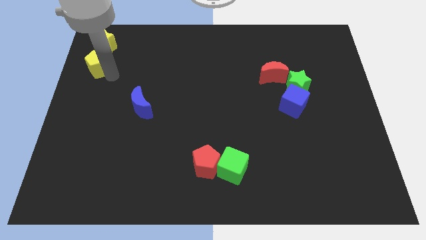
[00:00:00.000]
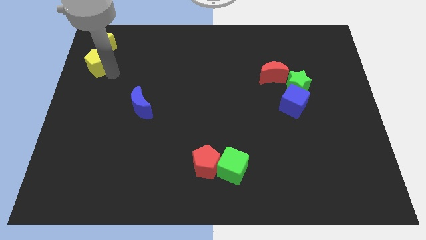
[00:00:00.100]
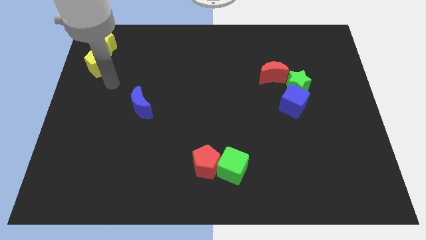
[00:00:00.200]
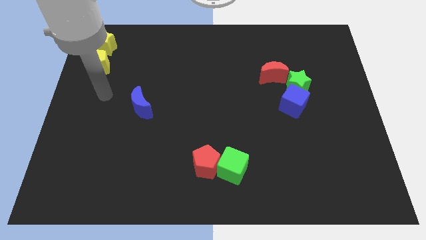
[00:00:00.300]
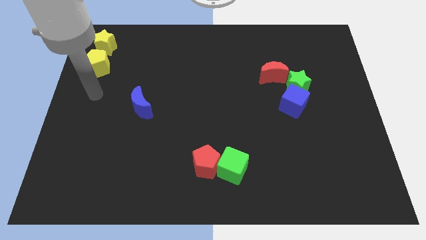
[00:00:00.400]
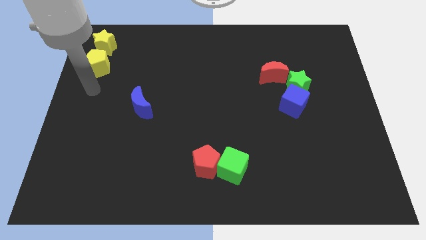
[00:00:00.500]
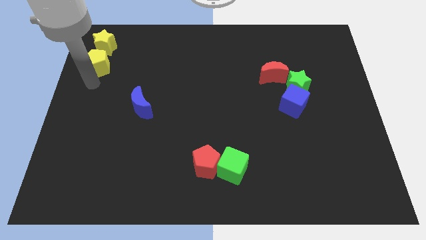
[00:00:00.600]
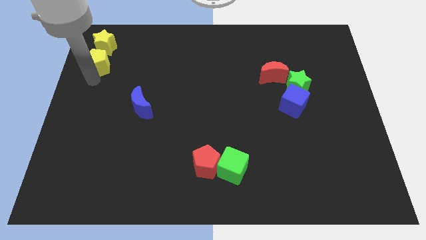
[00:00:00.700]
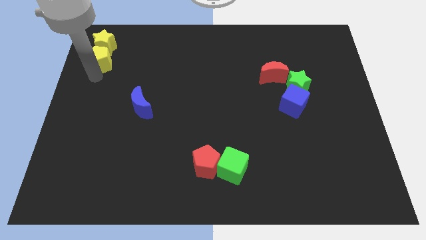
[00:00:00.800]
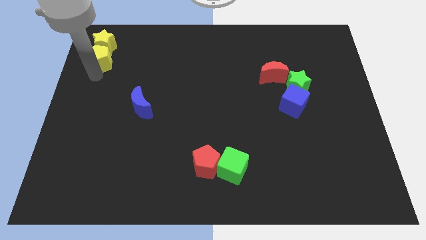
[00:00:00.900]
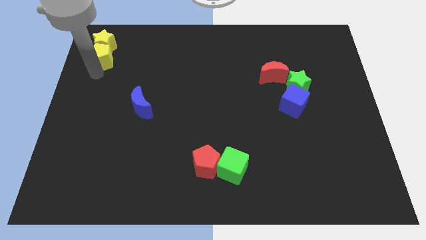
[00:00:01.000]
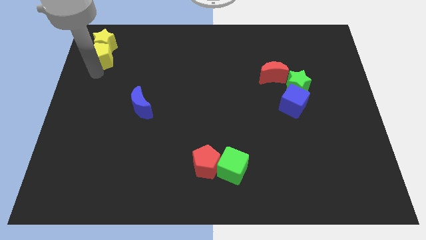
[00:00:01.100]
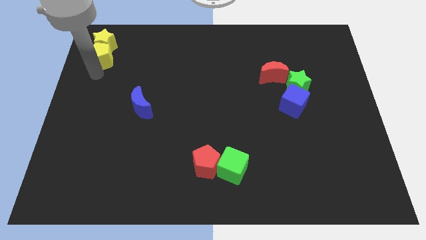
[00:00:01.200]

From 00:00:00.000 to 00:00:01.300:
move the yellow pentagon to the bottom of yellow star

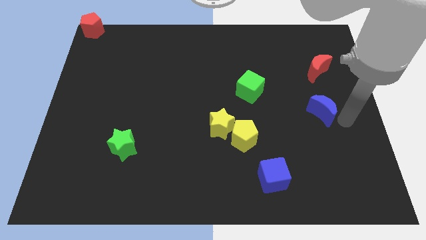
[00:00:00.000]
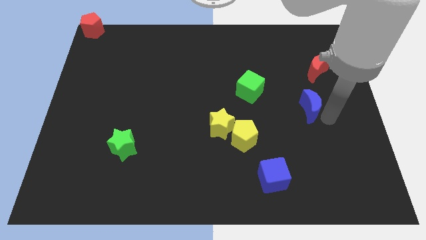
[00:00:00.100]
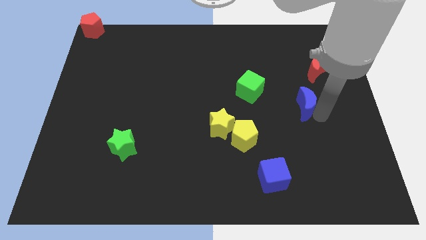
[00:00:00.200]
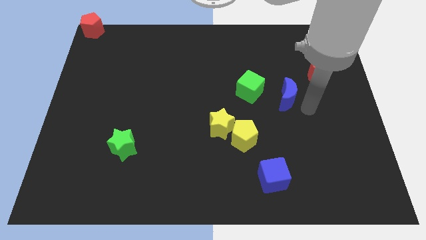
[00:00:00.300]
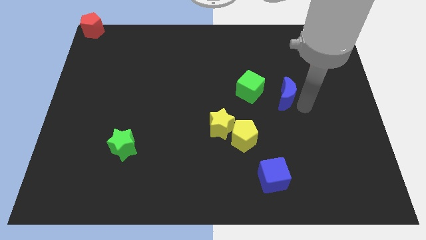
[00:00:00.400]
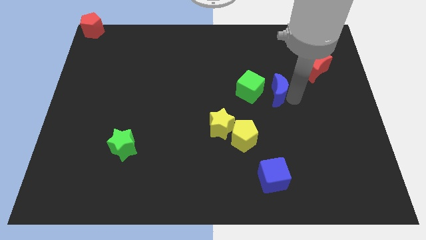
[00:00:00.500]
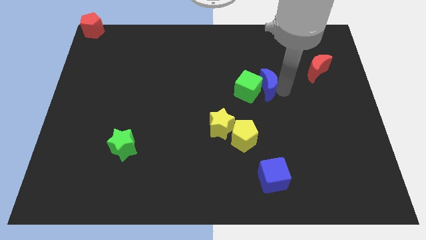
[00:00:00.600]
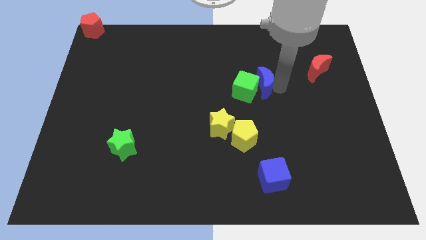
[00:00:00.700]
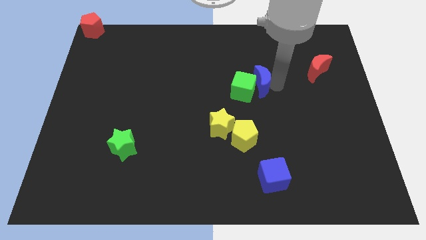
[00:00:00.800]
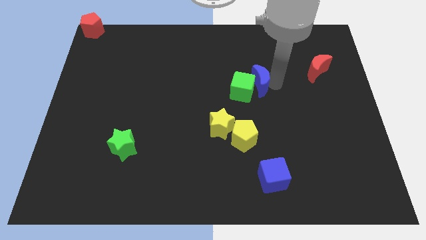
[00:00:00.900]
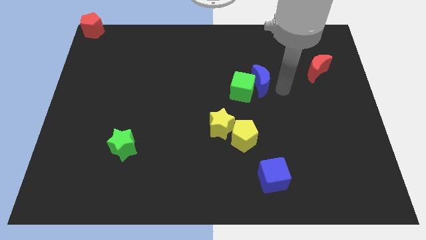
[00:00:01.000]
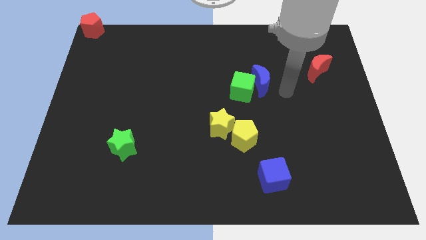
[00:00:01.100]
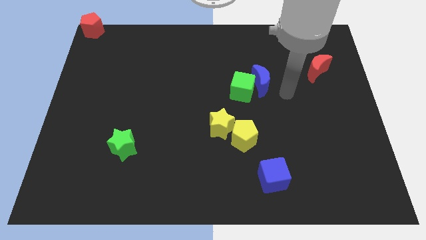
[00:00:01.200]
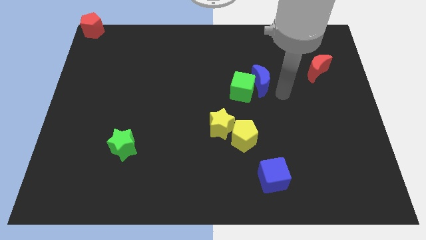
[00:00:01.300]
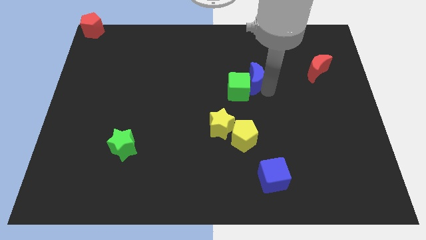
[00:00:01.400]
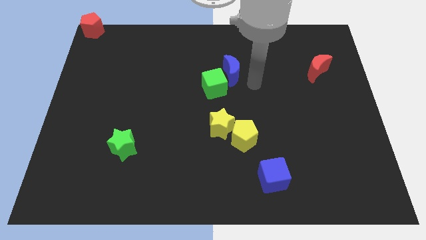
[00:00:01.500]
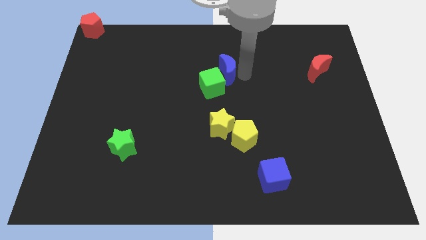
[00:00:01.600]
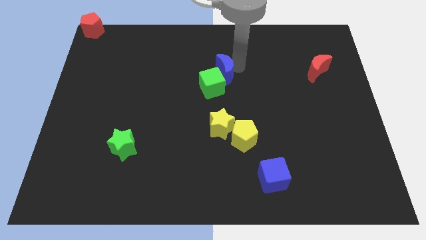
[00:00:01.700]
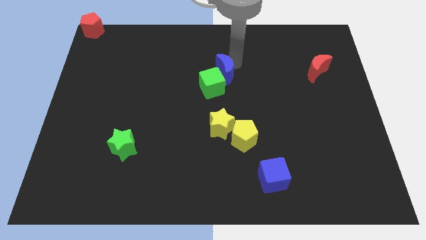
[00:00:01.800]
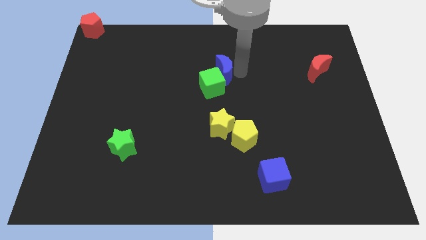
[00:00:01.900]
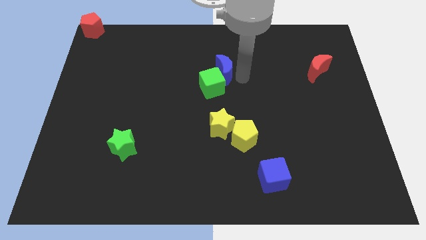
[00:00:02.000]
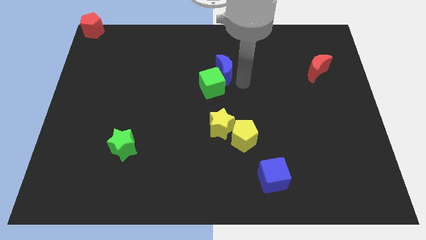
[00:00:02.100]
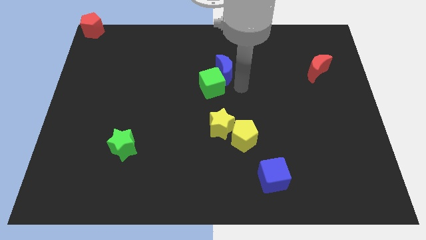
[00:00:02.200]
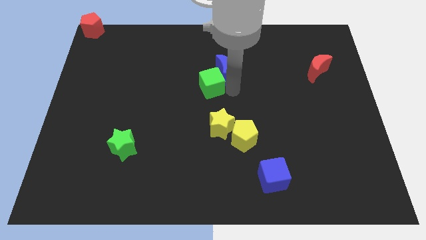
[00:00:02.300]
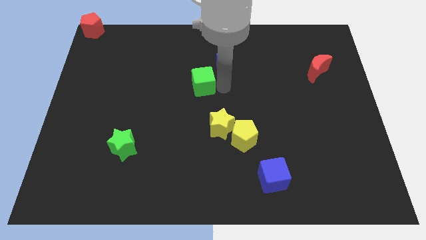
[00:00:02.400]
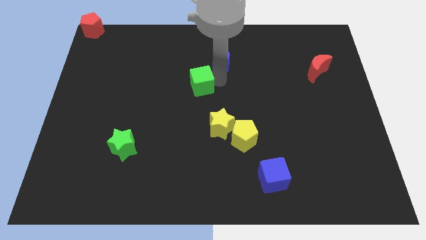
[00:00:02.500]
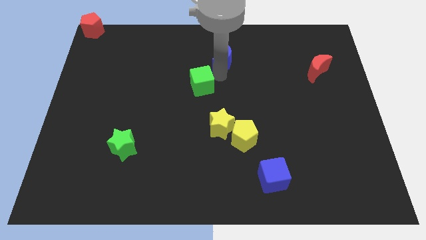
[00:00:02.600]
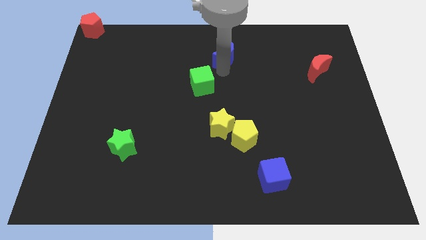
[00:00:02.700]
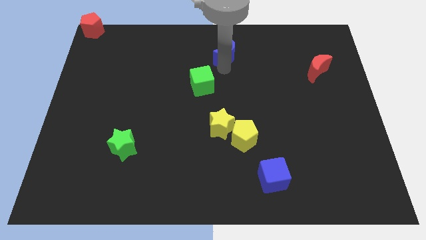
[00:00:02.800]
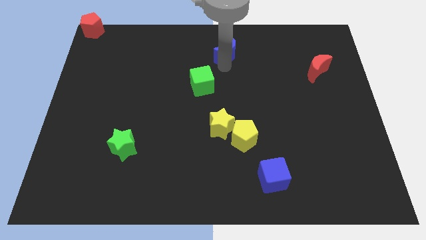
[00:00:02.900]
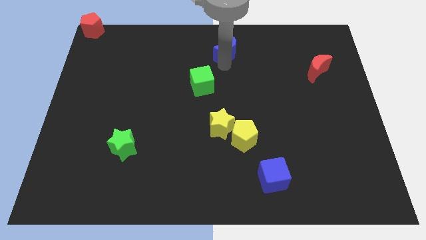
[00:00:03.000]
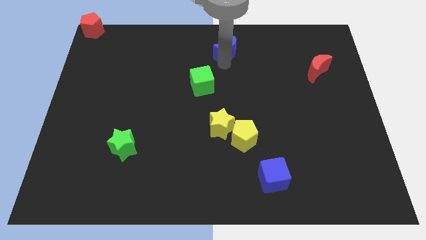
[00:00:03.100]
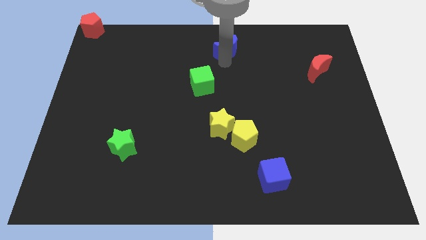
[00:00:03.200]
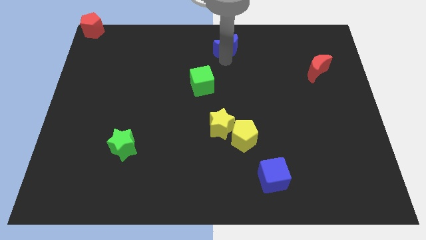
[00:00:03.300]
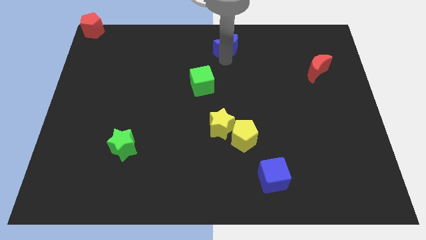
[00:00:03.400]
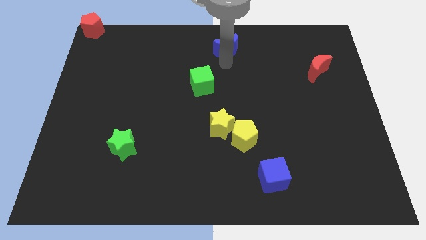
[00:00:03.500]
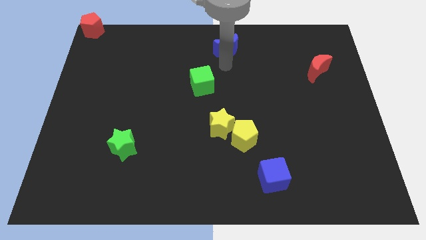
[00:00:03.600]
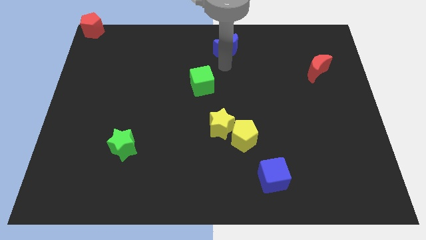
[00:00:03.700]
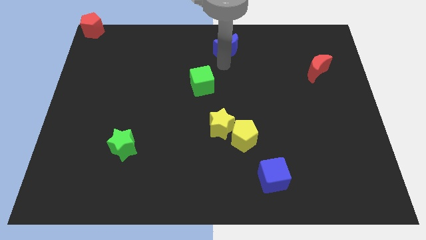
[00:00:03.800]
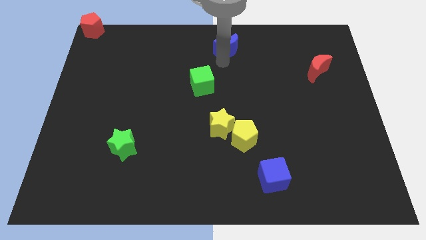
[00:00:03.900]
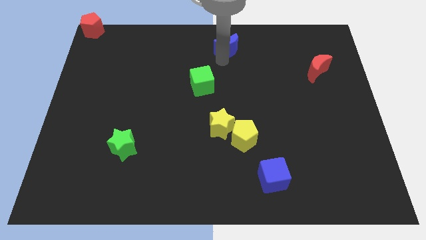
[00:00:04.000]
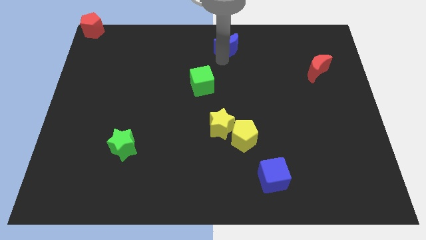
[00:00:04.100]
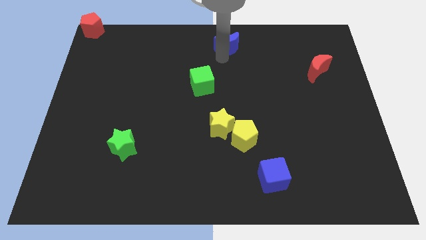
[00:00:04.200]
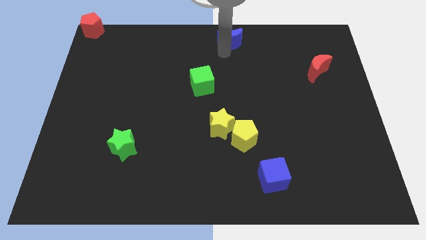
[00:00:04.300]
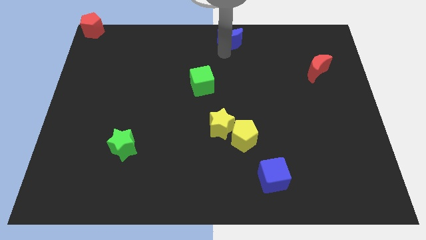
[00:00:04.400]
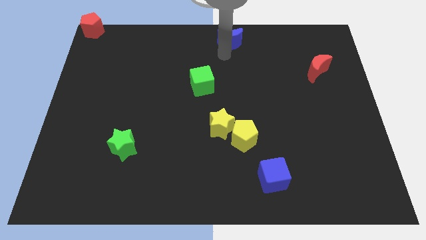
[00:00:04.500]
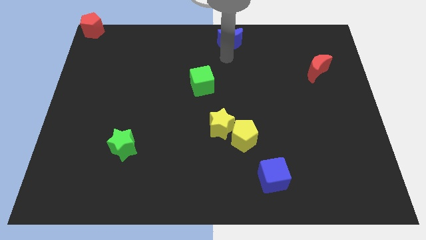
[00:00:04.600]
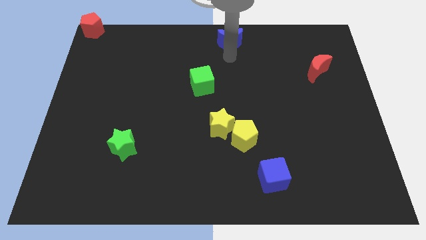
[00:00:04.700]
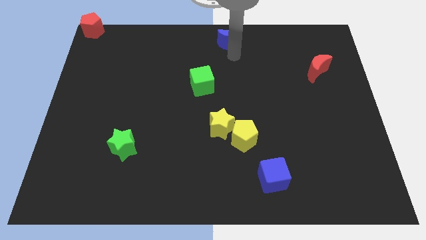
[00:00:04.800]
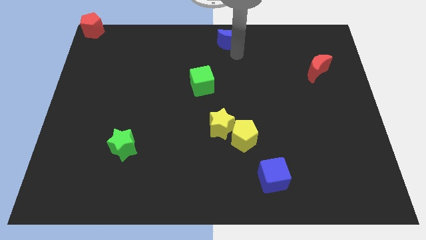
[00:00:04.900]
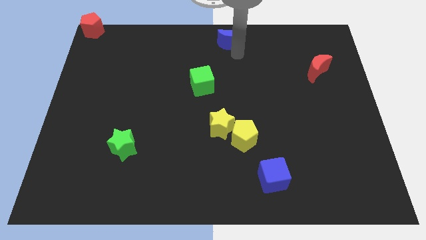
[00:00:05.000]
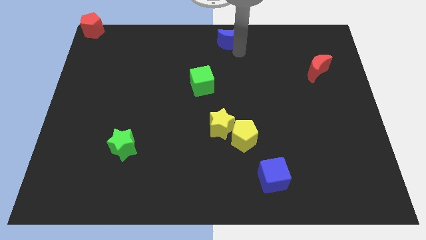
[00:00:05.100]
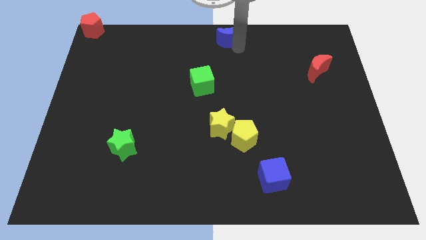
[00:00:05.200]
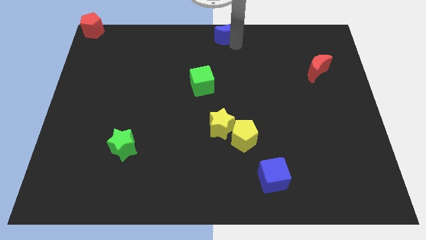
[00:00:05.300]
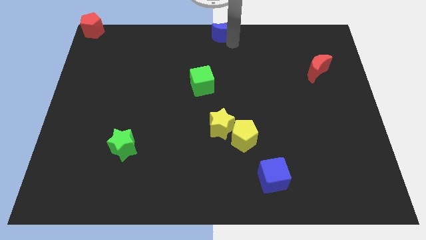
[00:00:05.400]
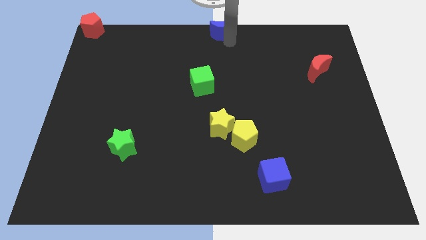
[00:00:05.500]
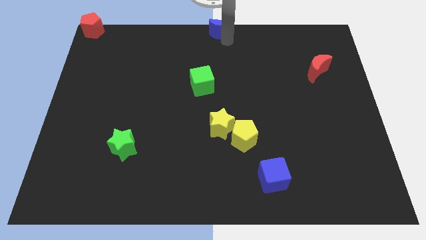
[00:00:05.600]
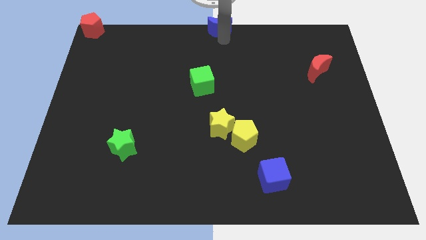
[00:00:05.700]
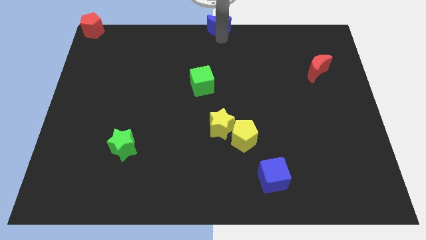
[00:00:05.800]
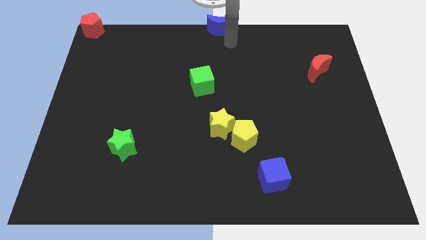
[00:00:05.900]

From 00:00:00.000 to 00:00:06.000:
push blue moon to the top center of the board

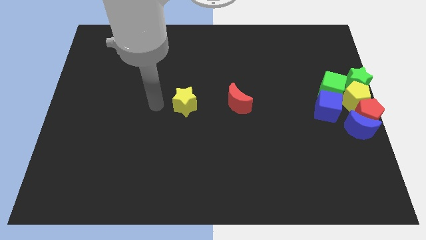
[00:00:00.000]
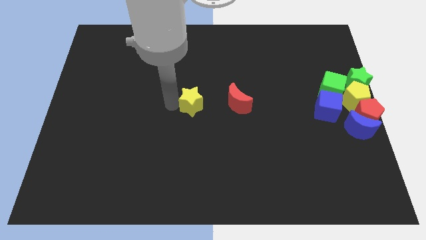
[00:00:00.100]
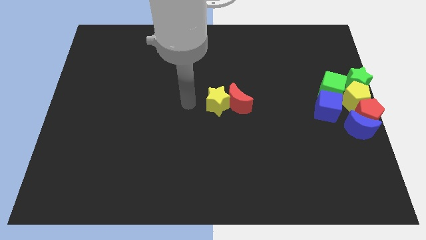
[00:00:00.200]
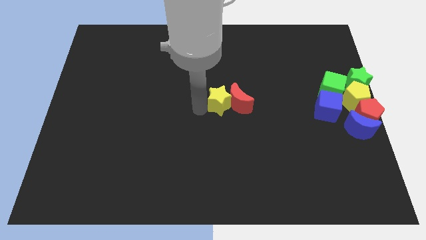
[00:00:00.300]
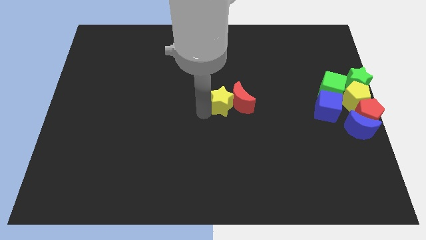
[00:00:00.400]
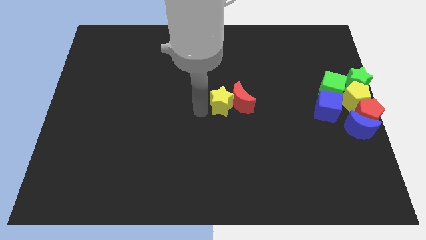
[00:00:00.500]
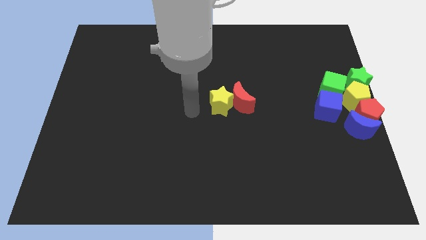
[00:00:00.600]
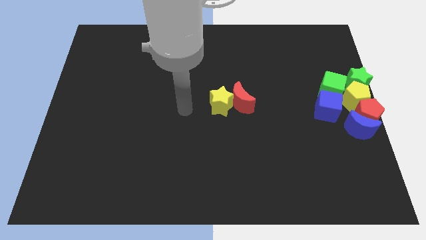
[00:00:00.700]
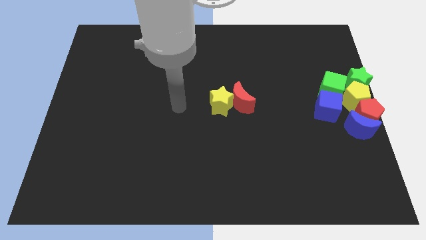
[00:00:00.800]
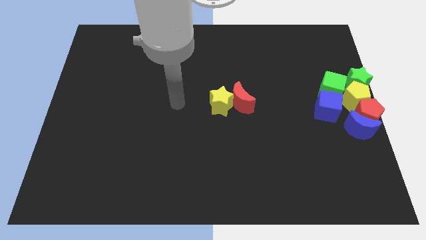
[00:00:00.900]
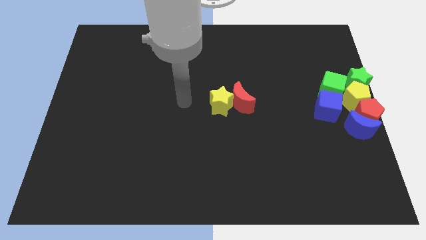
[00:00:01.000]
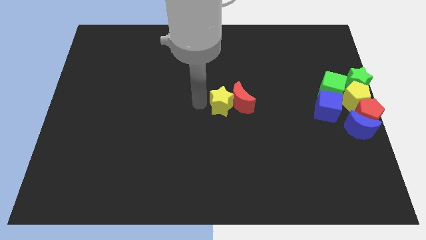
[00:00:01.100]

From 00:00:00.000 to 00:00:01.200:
push the yellow star into the red crescent

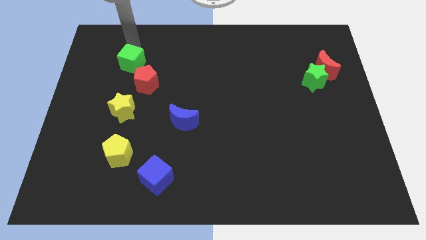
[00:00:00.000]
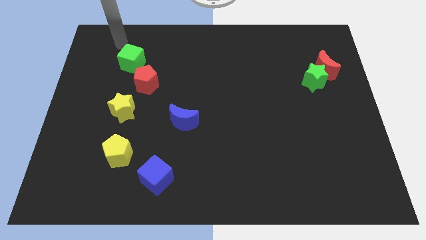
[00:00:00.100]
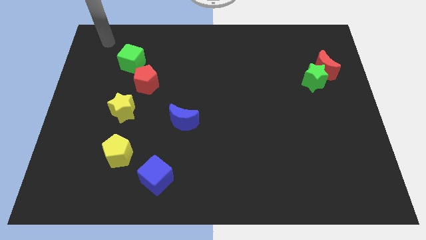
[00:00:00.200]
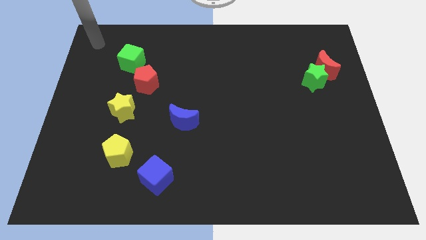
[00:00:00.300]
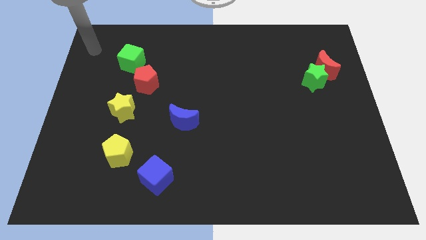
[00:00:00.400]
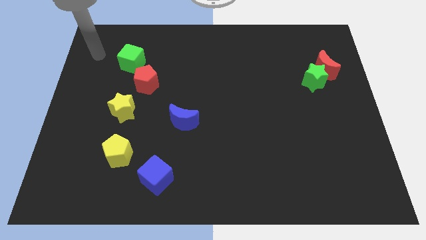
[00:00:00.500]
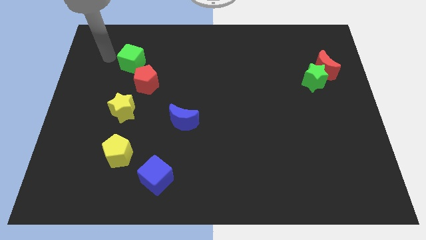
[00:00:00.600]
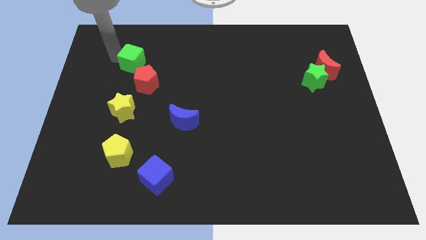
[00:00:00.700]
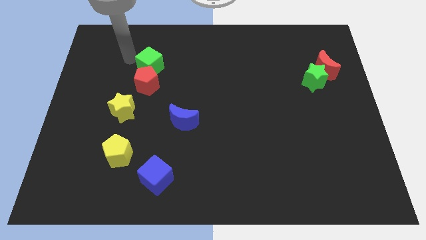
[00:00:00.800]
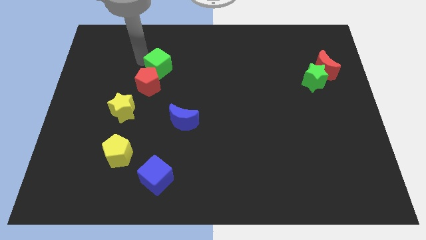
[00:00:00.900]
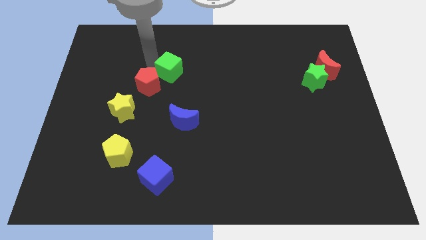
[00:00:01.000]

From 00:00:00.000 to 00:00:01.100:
move green cube slightly right
